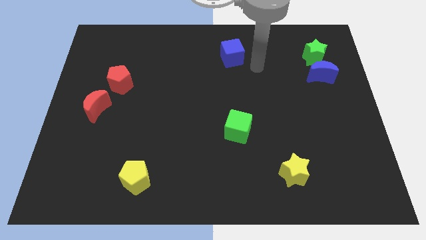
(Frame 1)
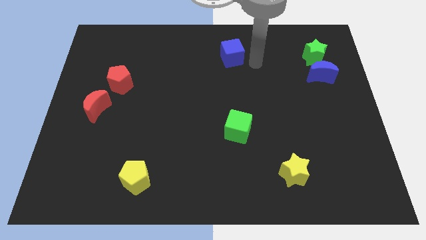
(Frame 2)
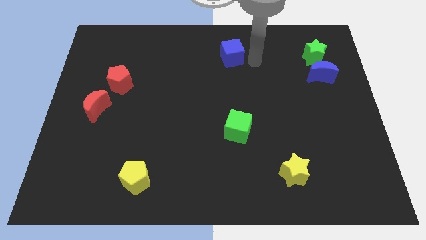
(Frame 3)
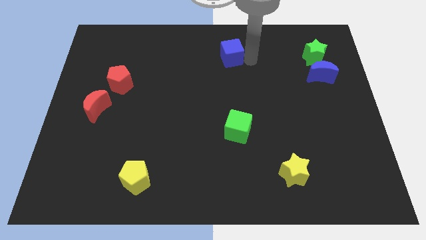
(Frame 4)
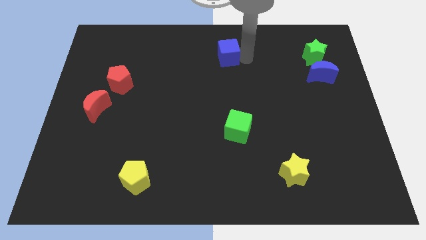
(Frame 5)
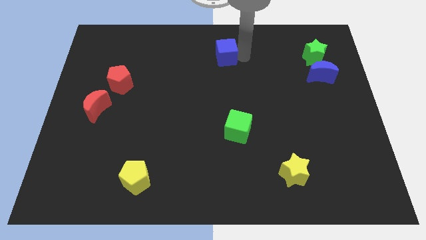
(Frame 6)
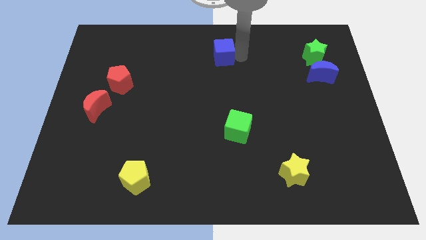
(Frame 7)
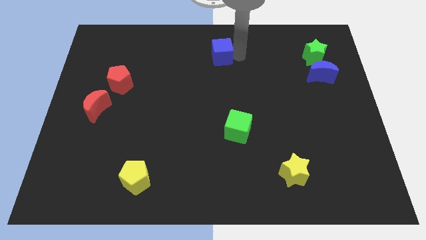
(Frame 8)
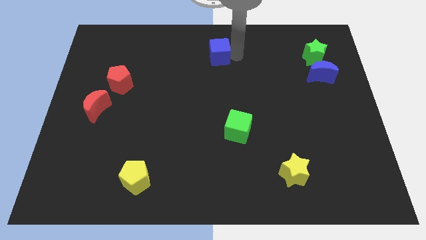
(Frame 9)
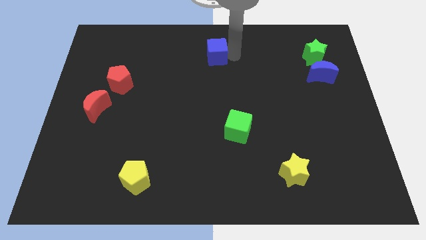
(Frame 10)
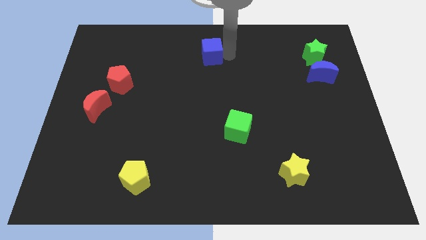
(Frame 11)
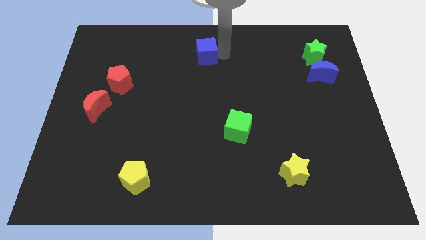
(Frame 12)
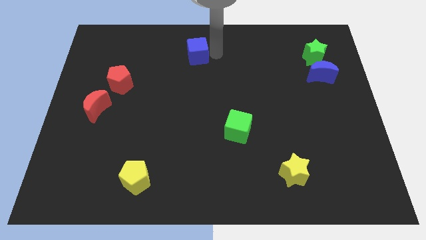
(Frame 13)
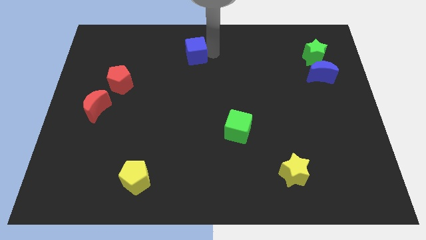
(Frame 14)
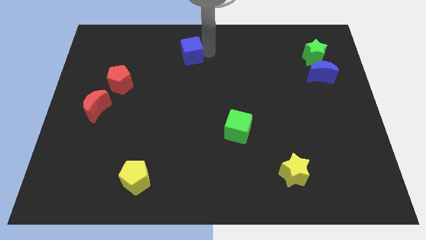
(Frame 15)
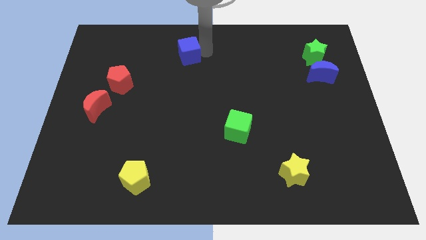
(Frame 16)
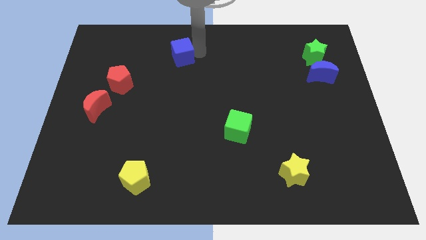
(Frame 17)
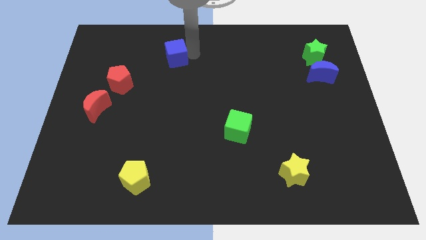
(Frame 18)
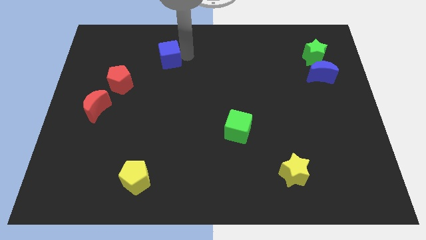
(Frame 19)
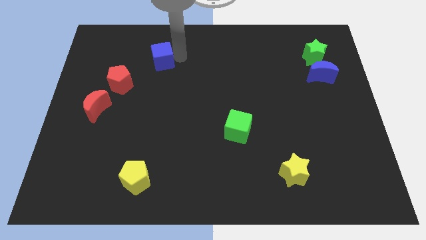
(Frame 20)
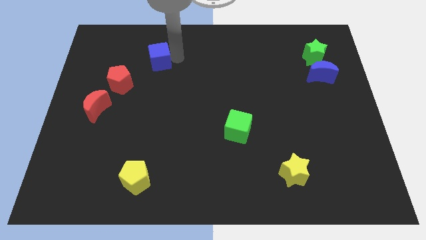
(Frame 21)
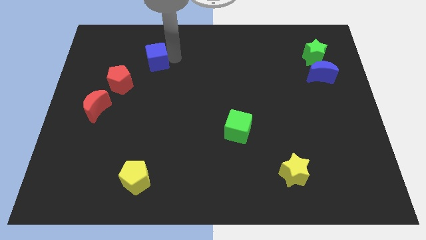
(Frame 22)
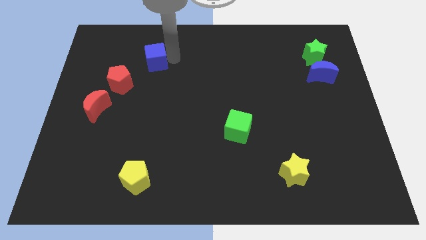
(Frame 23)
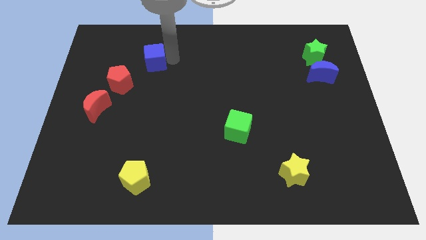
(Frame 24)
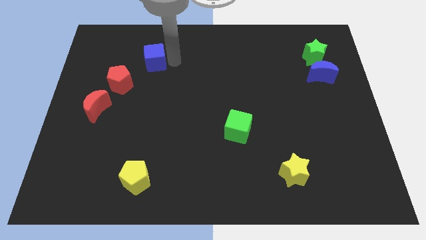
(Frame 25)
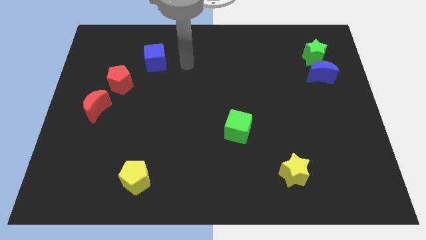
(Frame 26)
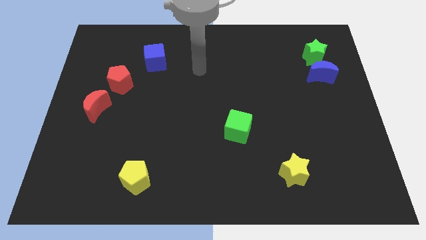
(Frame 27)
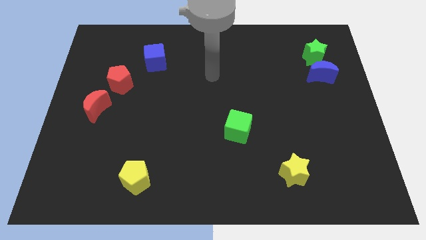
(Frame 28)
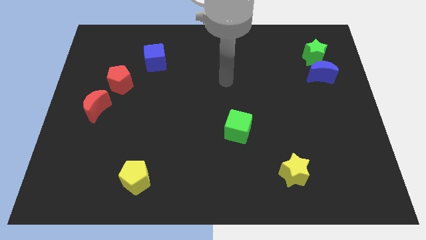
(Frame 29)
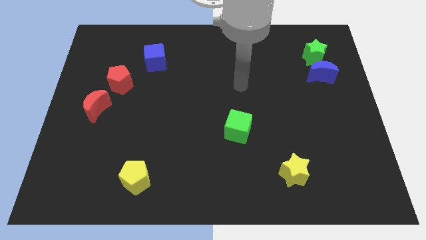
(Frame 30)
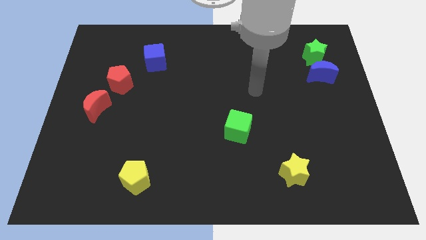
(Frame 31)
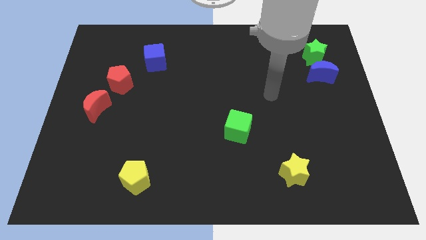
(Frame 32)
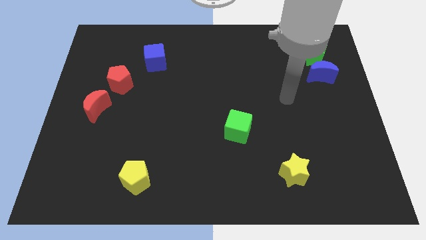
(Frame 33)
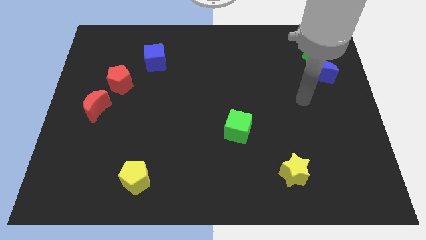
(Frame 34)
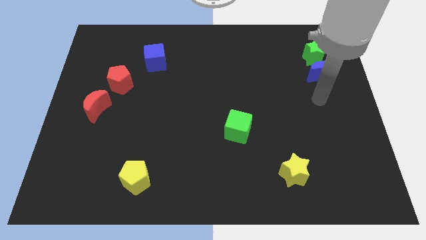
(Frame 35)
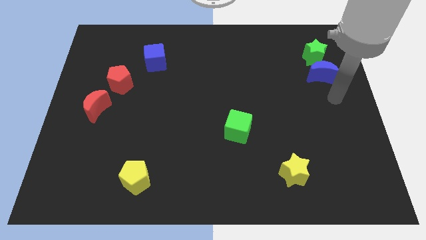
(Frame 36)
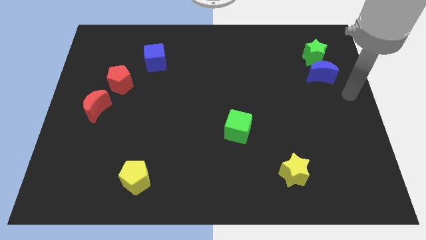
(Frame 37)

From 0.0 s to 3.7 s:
place blue cube near to the red pentagon

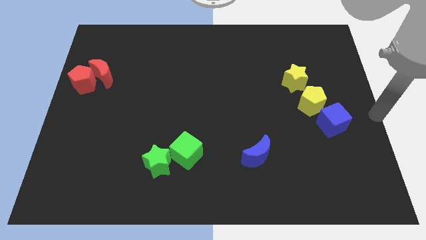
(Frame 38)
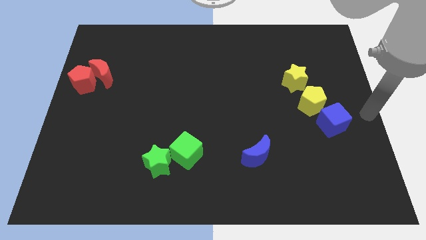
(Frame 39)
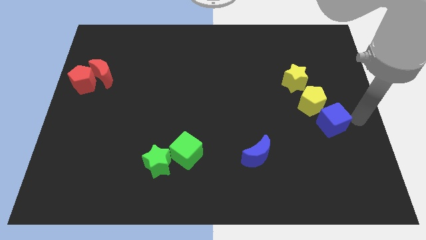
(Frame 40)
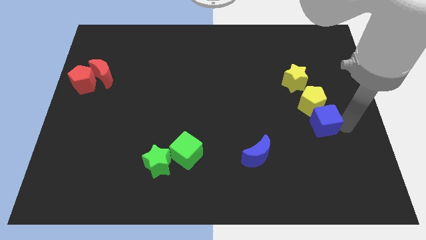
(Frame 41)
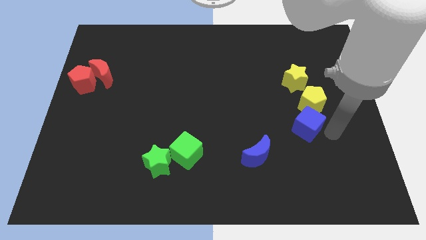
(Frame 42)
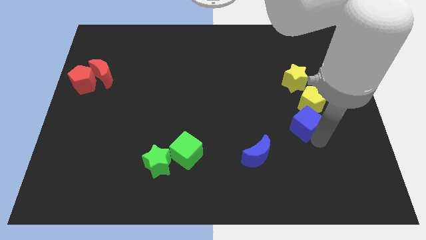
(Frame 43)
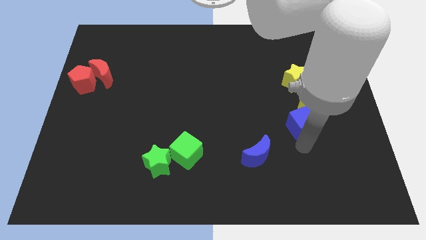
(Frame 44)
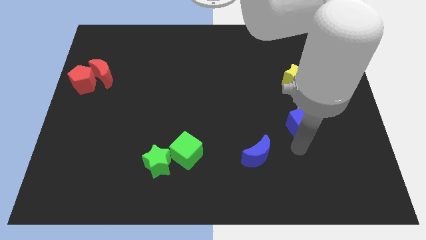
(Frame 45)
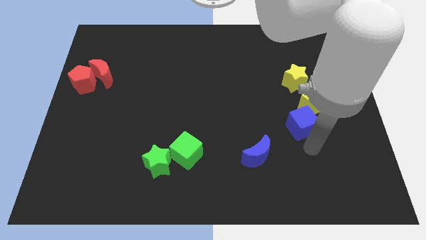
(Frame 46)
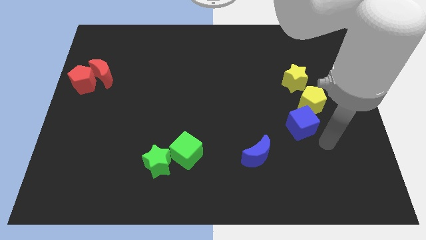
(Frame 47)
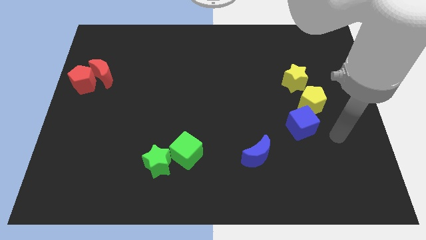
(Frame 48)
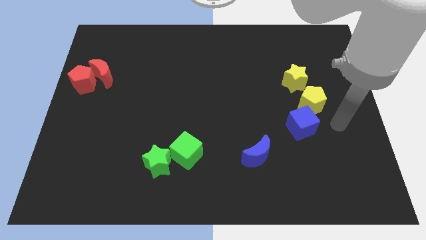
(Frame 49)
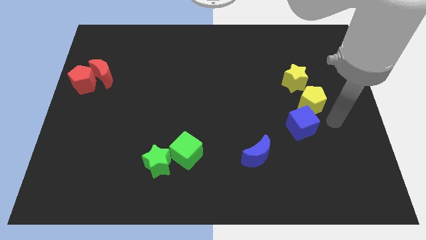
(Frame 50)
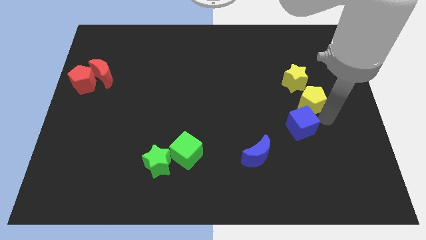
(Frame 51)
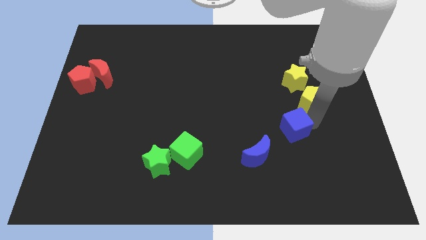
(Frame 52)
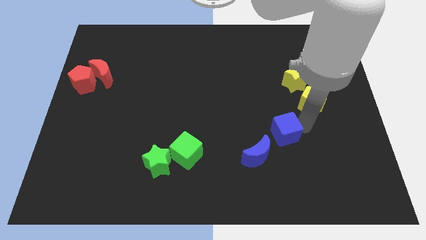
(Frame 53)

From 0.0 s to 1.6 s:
separate the blue cube from the yellow pentagon

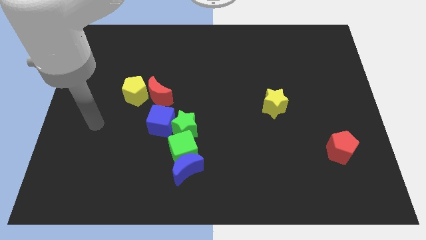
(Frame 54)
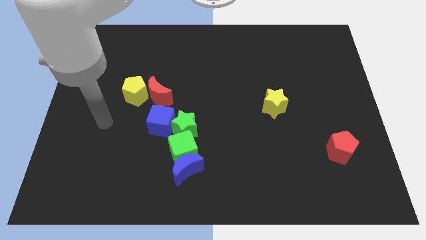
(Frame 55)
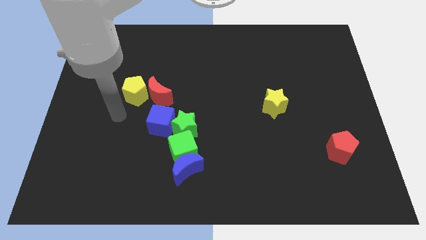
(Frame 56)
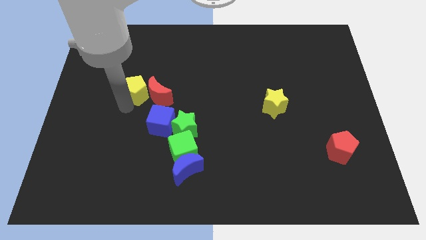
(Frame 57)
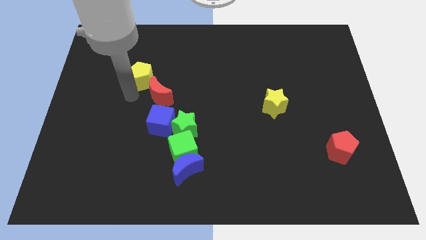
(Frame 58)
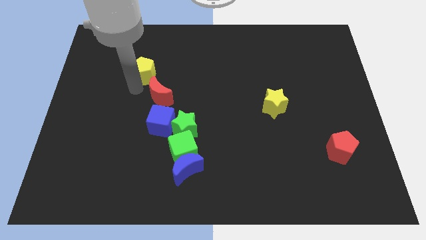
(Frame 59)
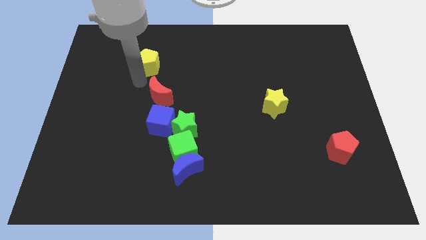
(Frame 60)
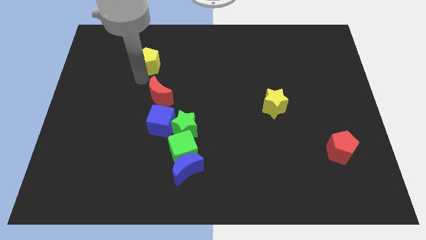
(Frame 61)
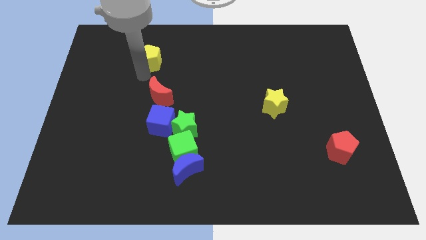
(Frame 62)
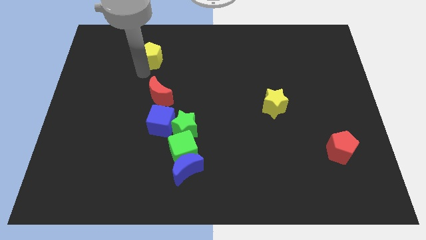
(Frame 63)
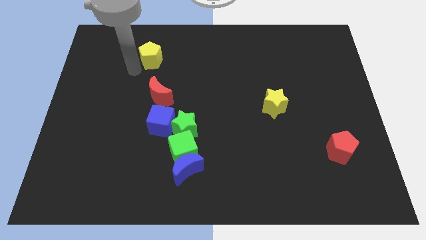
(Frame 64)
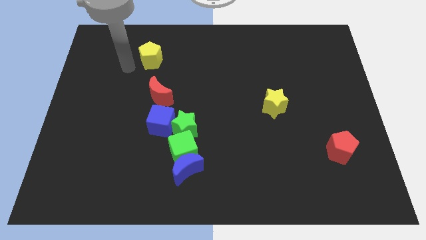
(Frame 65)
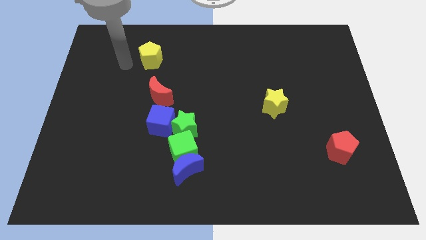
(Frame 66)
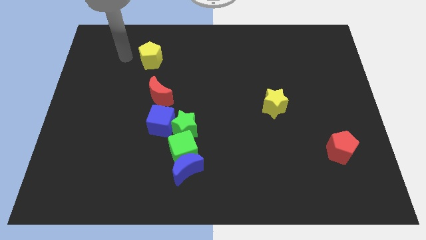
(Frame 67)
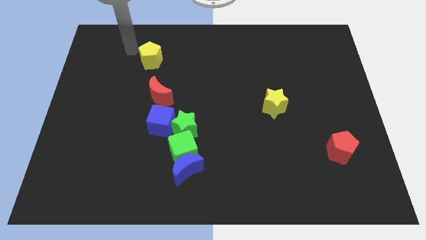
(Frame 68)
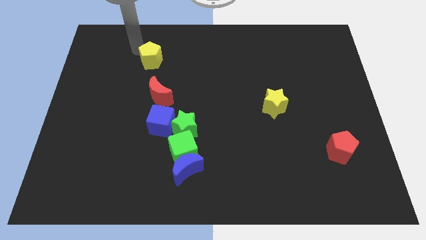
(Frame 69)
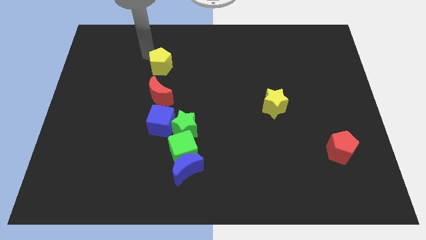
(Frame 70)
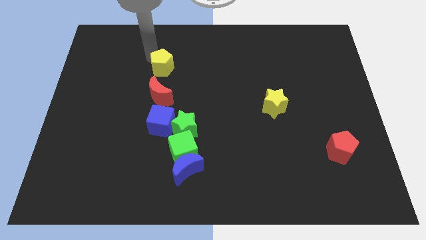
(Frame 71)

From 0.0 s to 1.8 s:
move the yellow pentagon to the top of the red crescent

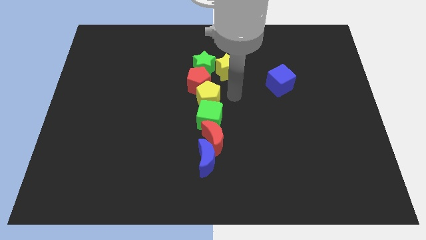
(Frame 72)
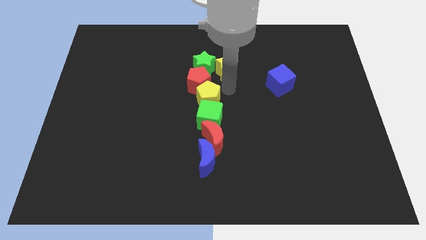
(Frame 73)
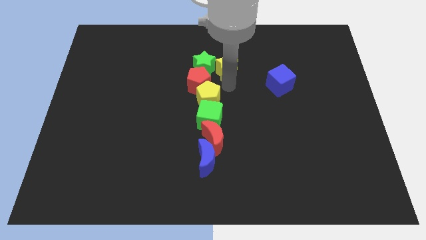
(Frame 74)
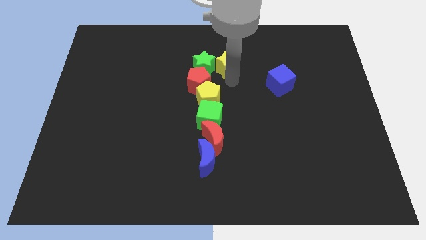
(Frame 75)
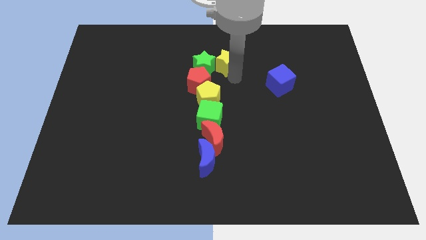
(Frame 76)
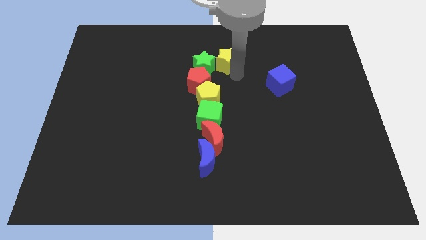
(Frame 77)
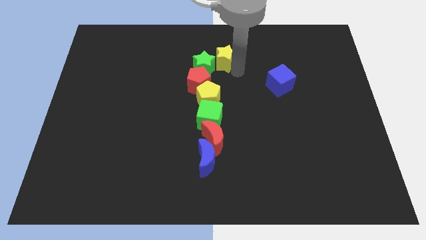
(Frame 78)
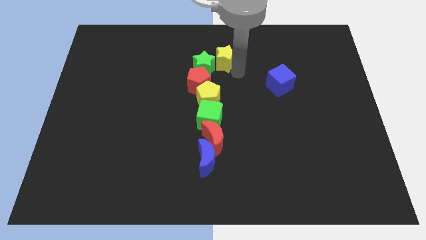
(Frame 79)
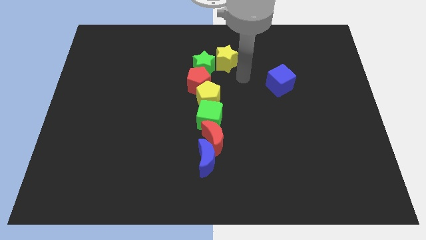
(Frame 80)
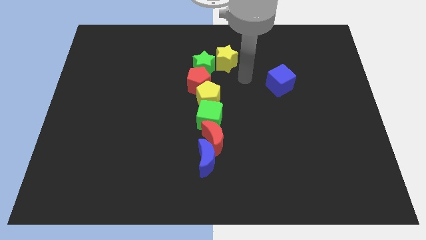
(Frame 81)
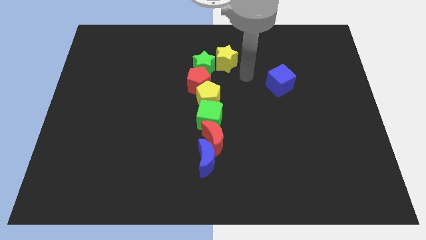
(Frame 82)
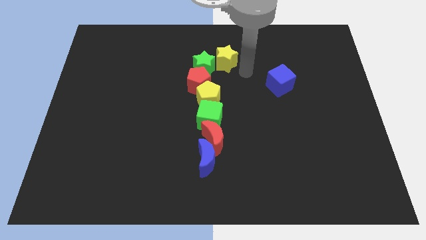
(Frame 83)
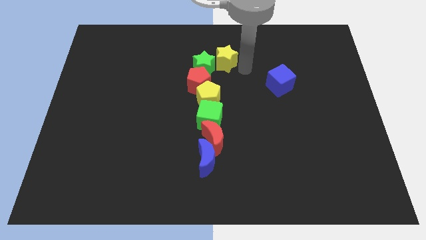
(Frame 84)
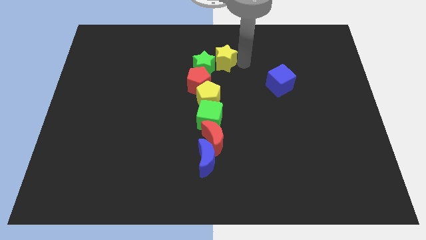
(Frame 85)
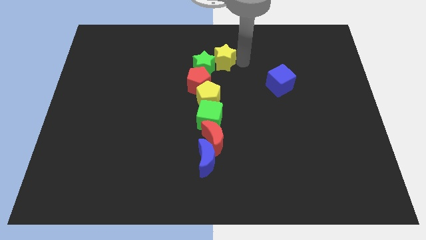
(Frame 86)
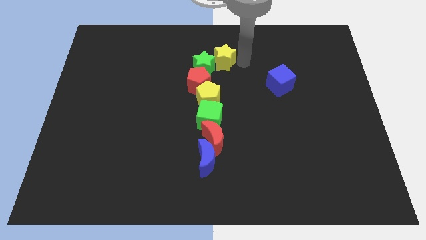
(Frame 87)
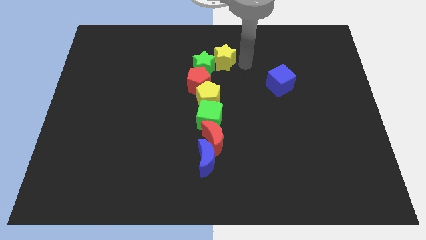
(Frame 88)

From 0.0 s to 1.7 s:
slide the yellow star to the top right of the green star

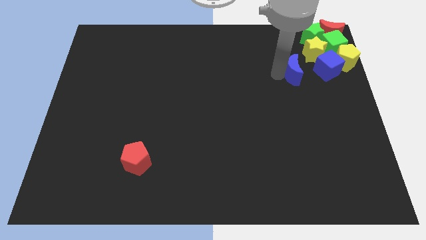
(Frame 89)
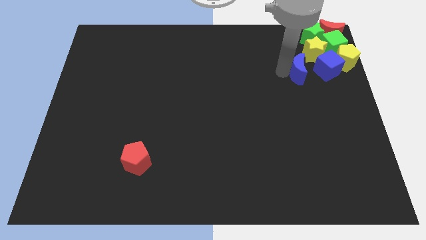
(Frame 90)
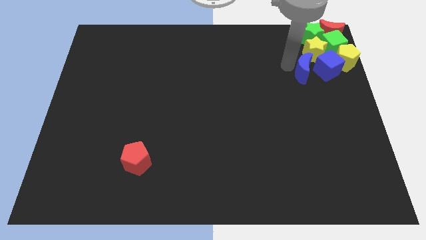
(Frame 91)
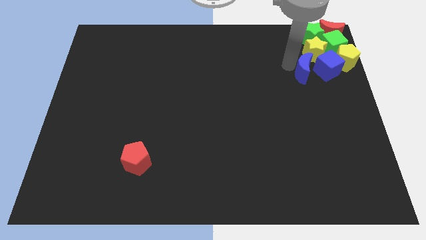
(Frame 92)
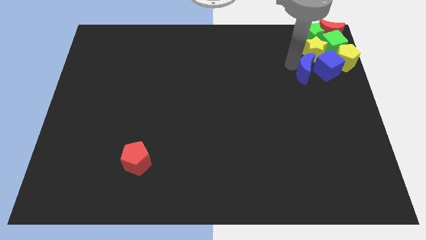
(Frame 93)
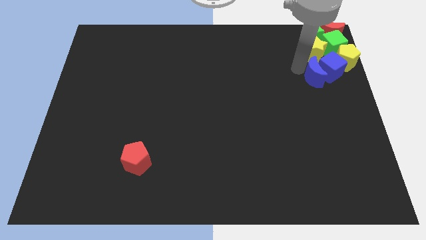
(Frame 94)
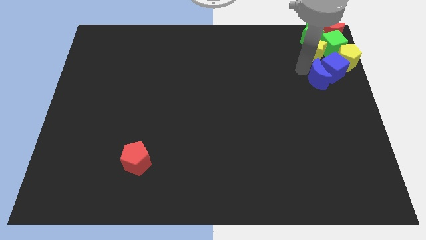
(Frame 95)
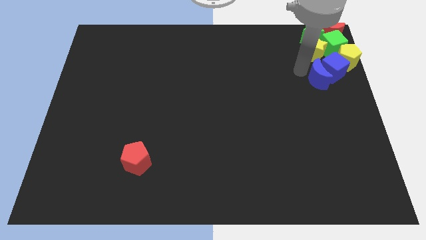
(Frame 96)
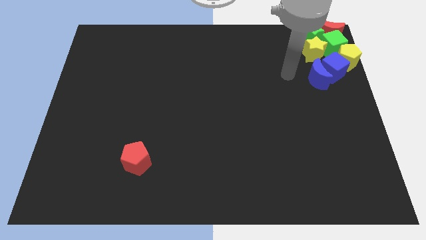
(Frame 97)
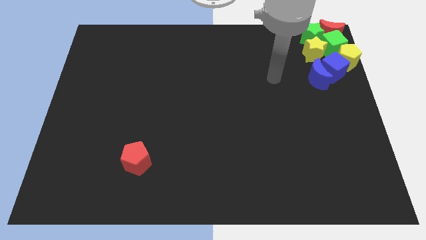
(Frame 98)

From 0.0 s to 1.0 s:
move the blue crescent close to the blue cube
